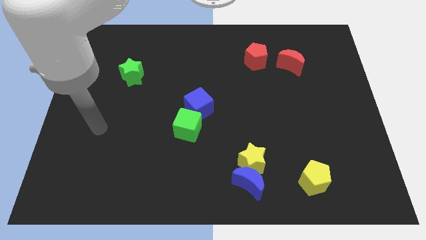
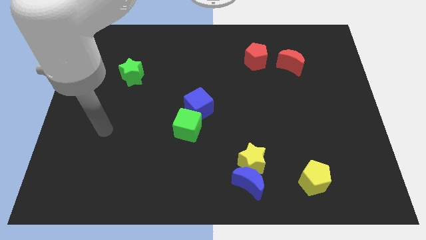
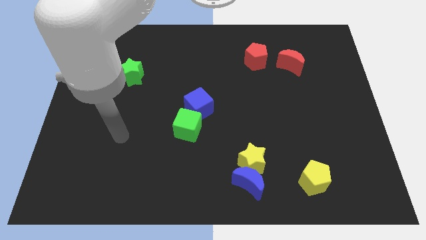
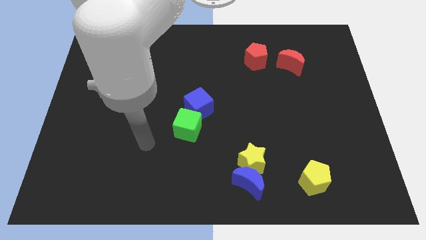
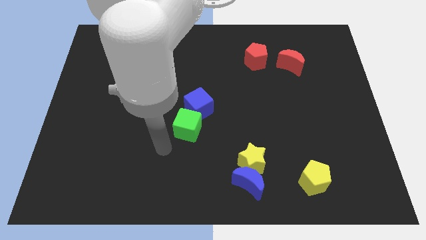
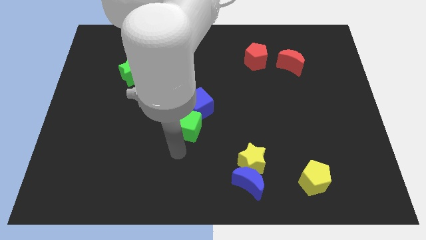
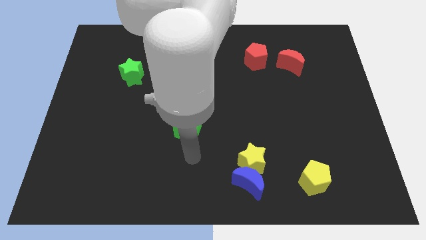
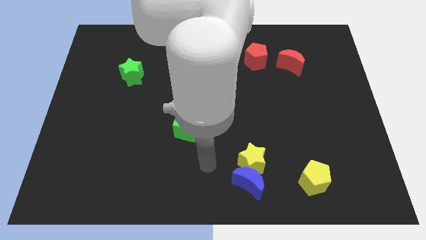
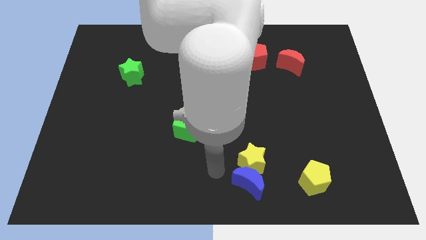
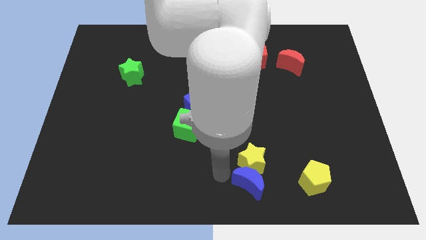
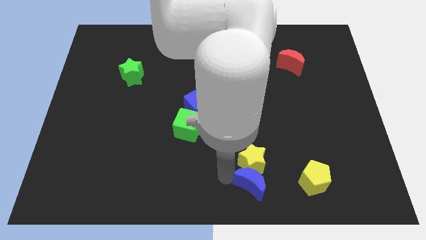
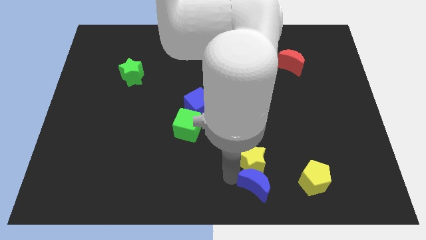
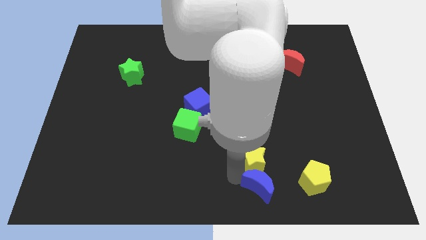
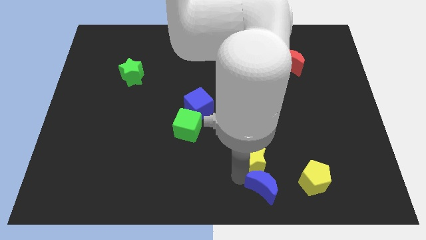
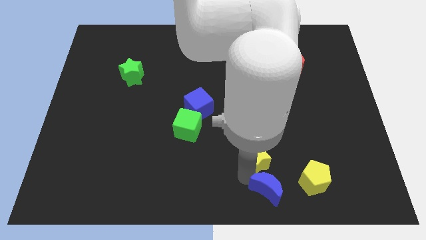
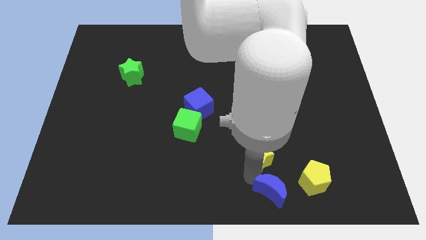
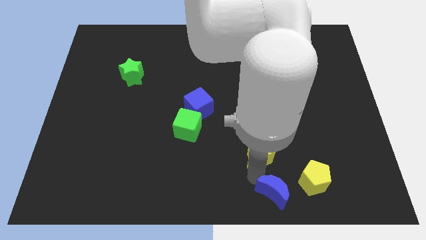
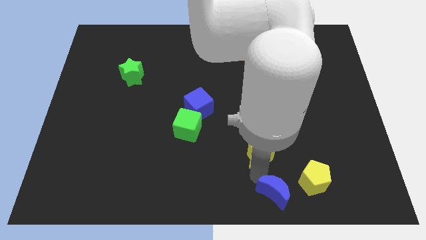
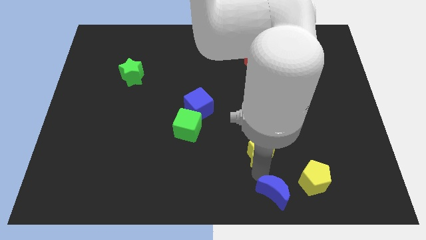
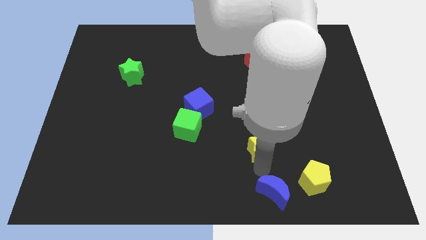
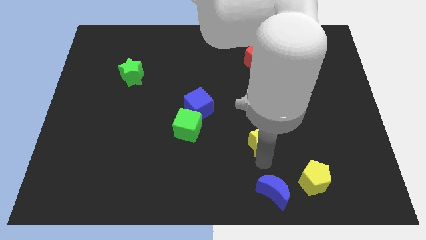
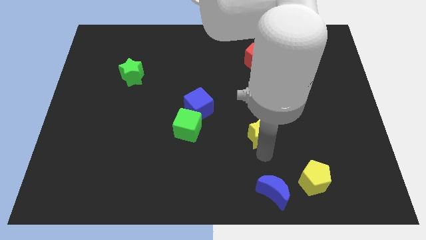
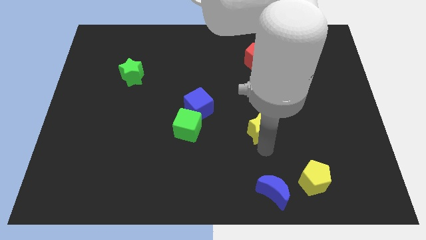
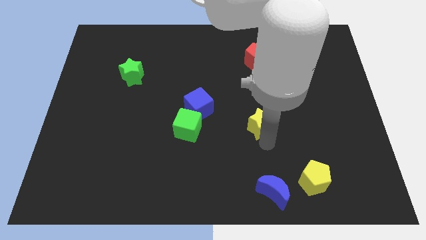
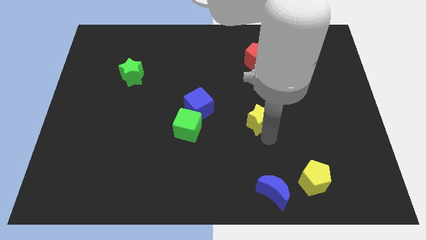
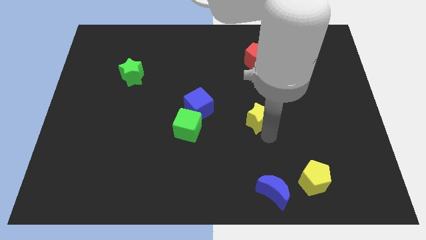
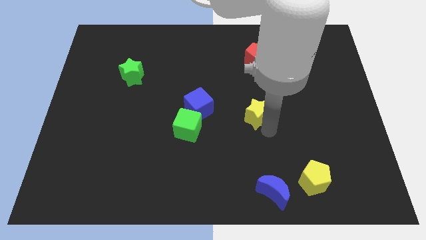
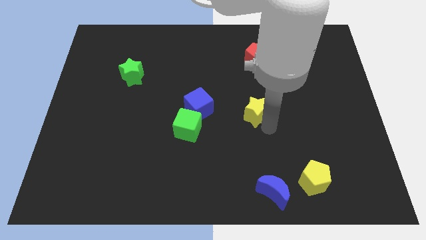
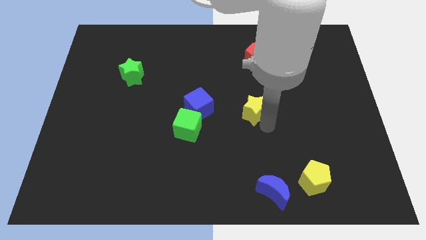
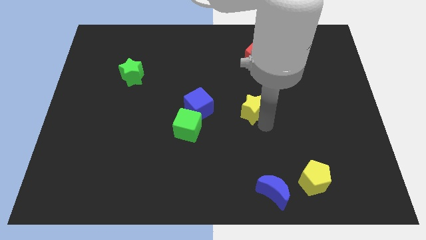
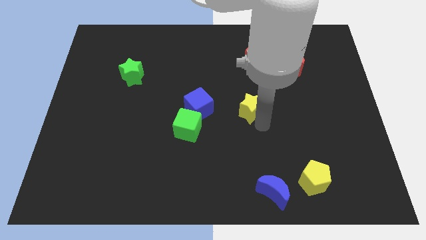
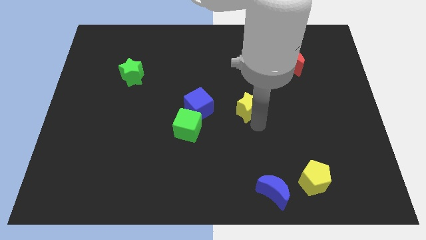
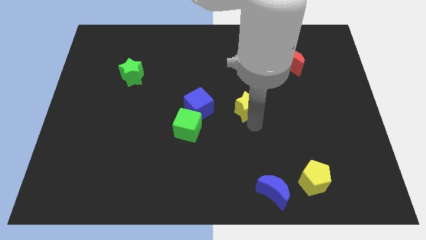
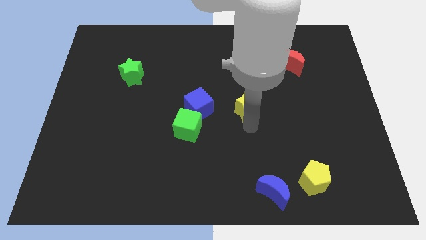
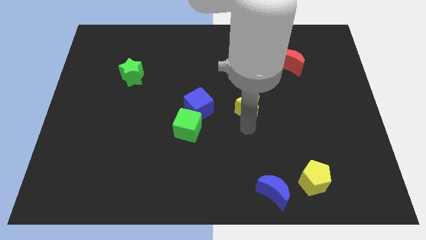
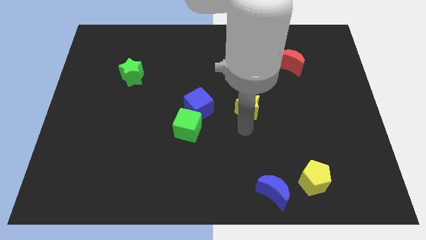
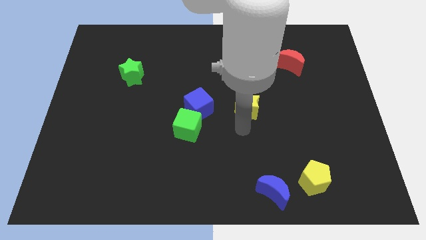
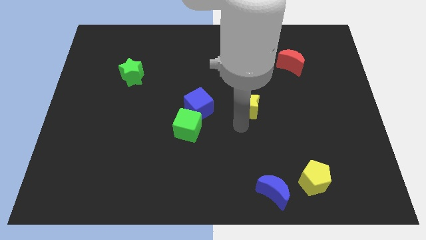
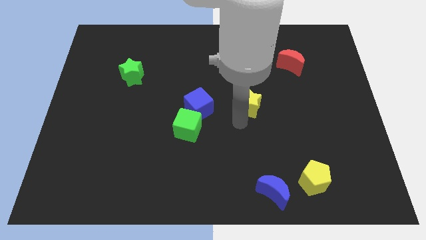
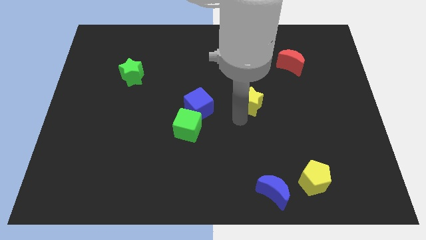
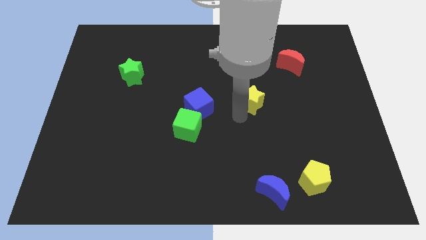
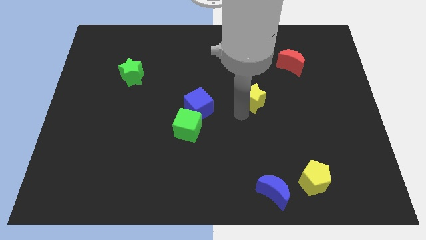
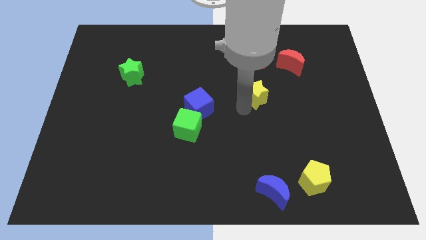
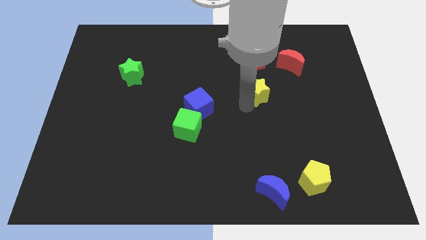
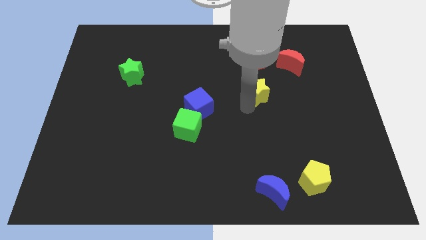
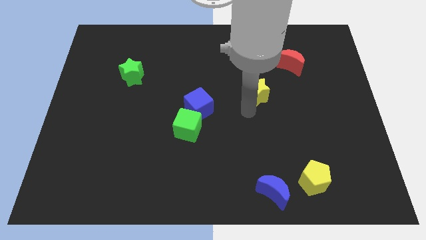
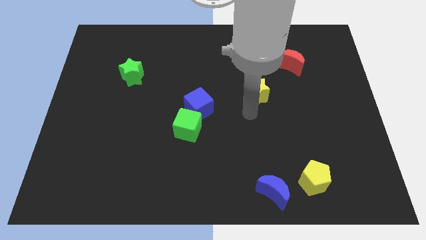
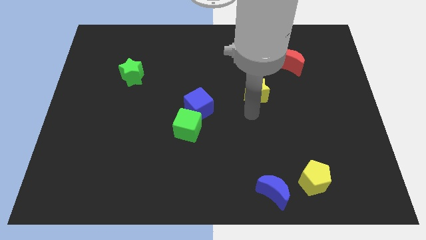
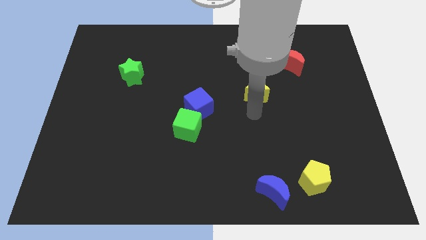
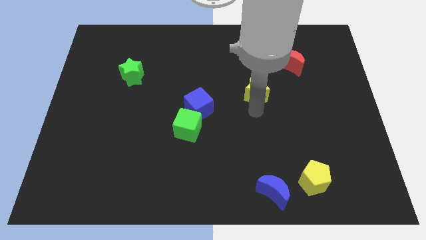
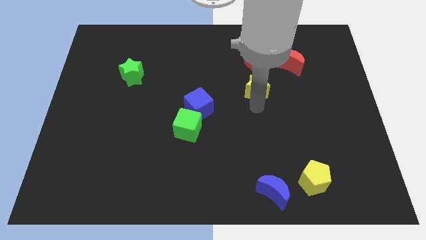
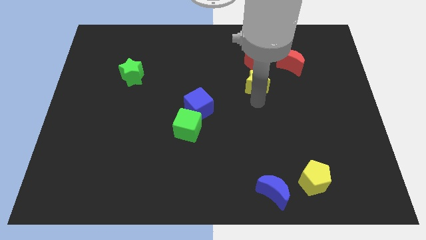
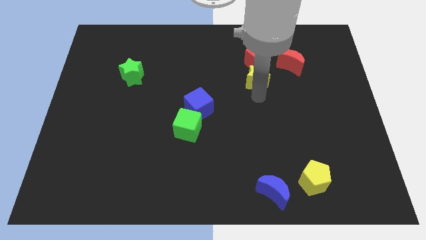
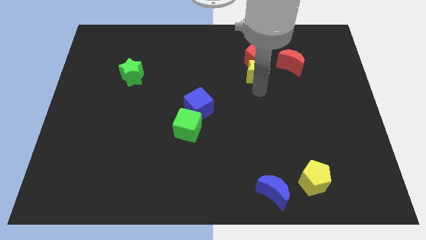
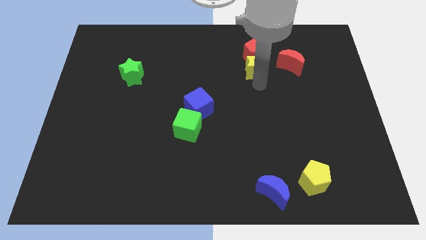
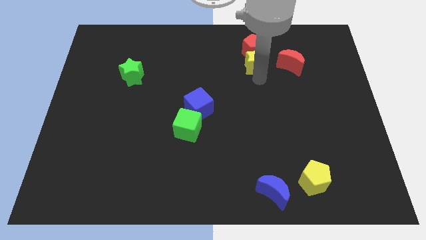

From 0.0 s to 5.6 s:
put the yellow star next to the red pentagon

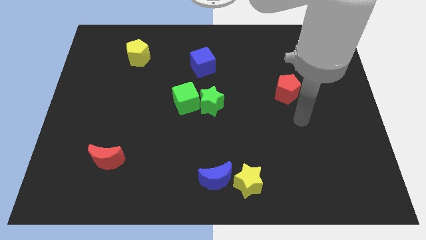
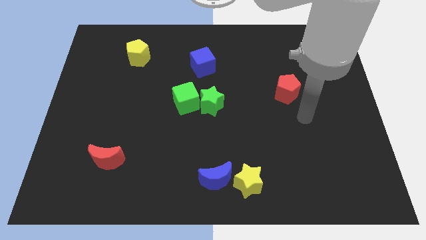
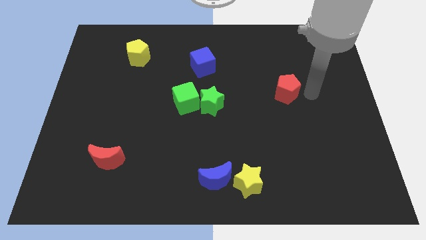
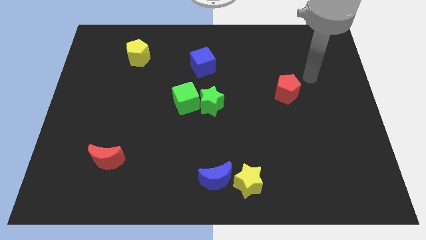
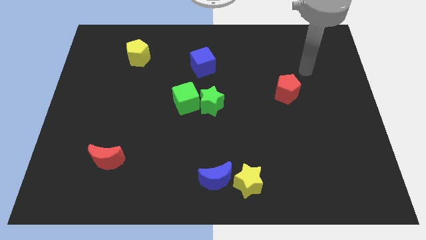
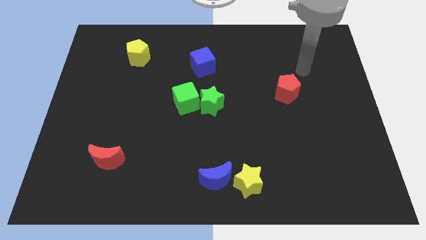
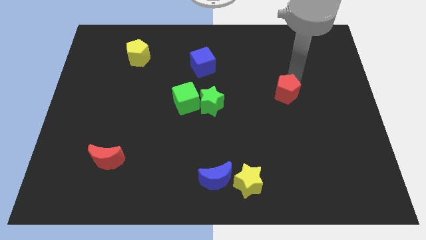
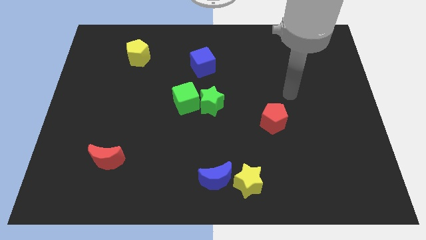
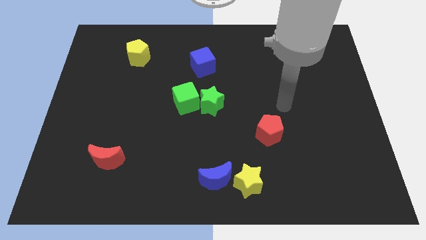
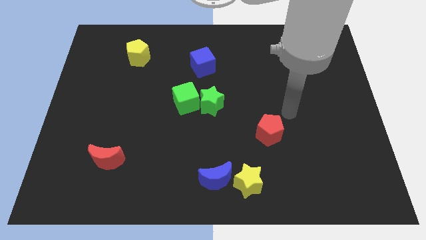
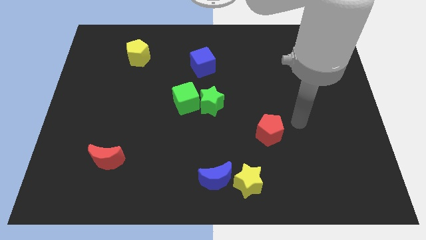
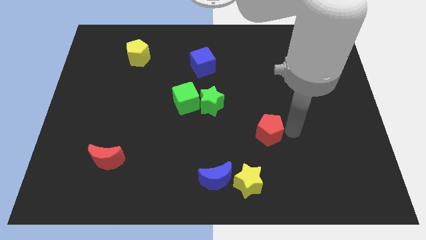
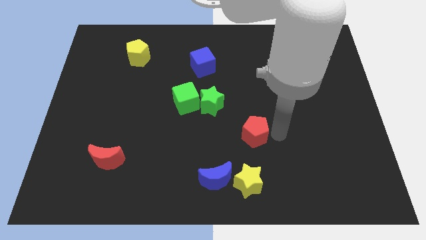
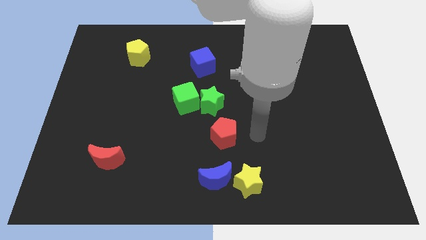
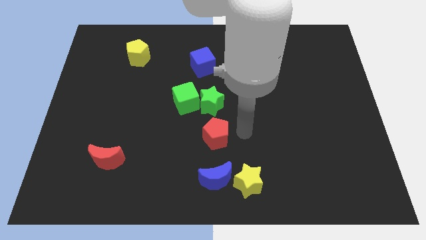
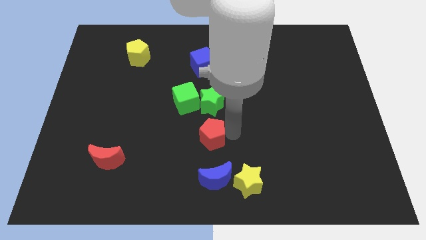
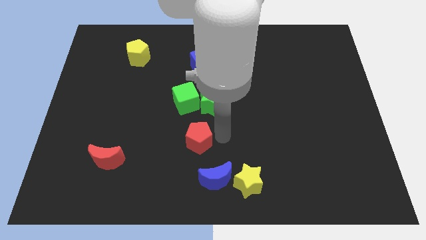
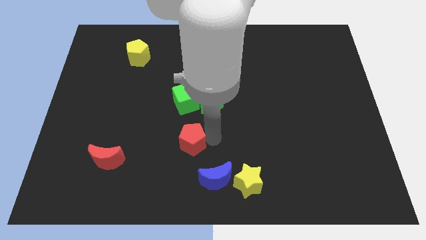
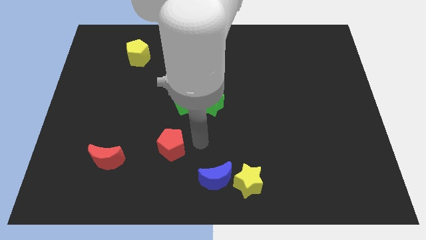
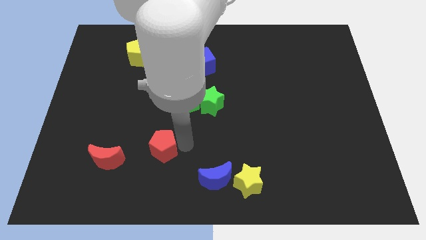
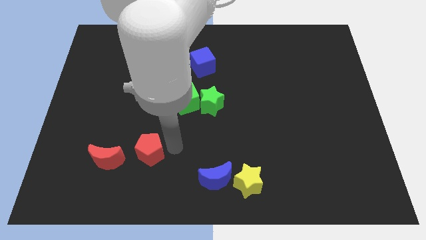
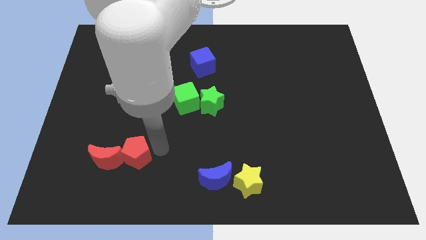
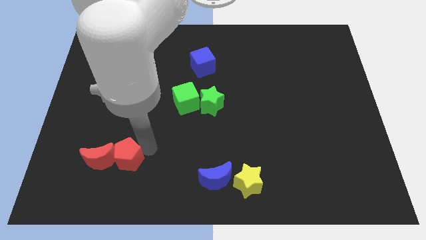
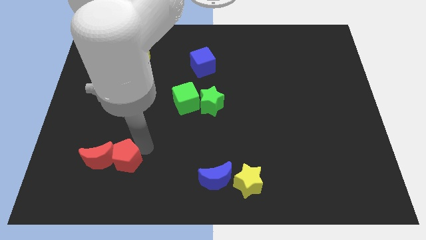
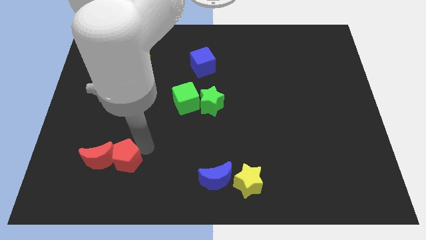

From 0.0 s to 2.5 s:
move the red pentagon towards the red moon

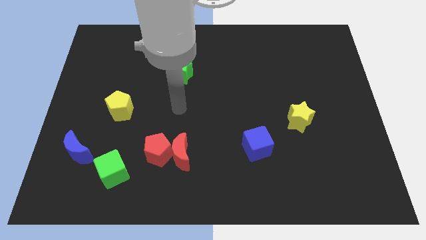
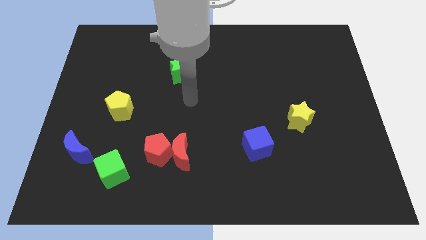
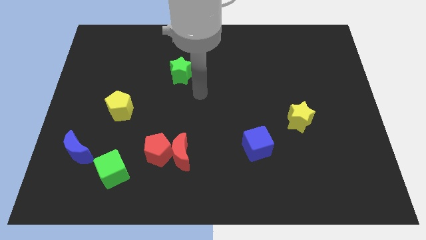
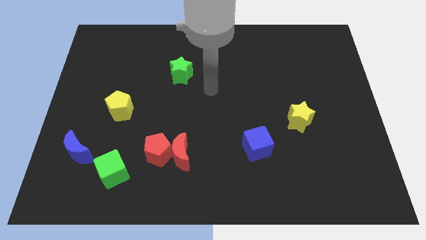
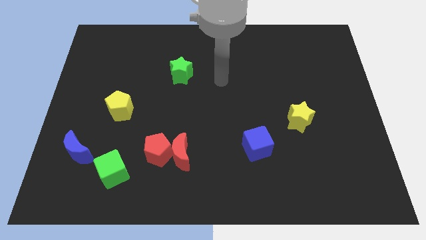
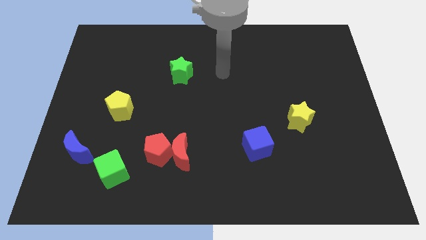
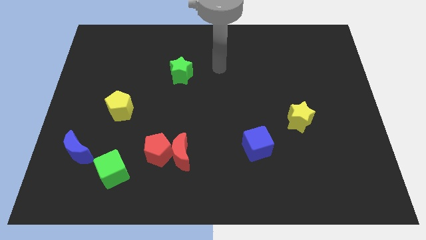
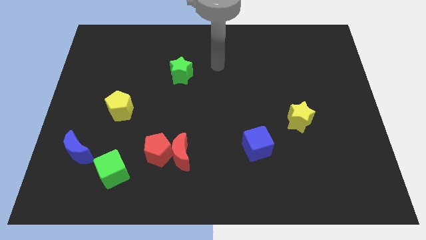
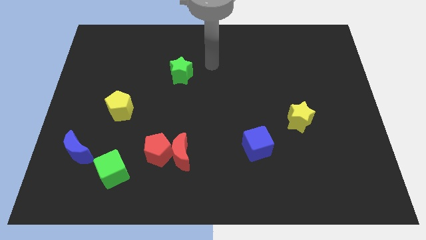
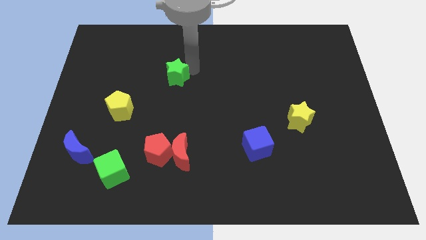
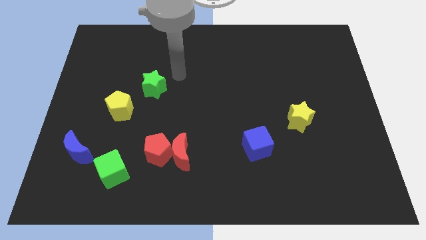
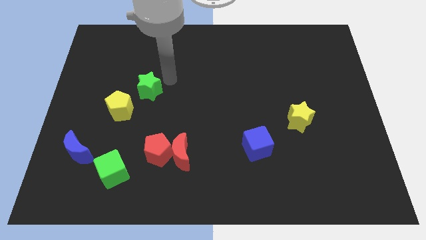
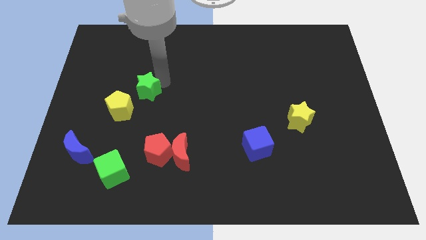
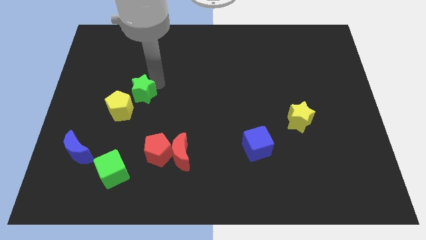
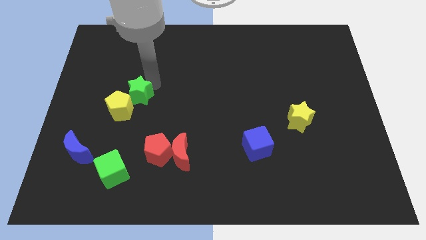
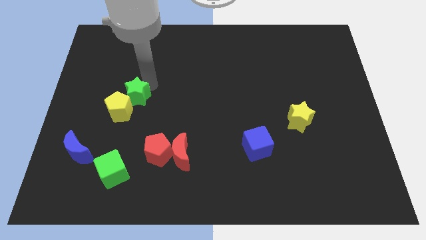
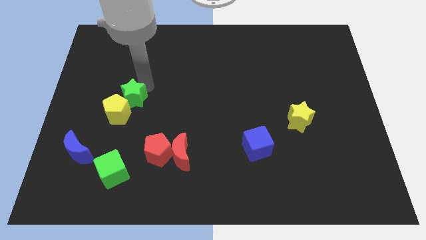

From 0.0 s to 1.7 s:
move the green star close to the yellow pentagon
